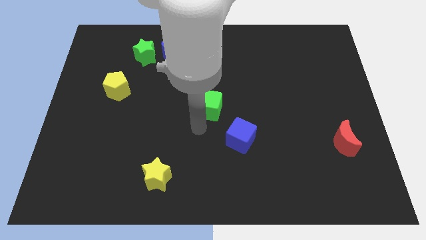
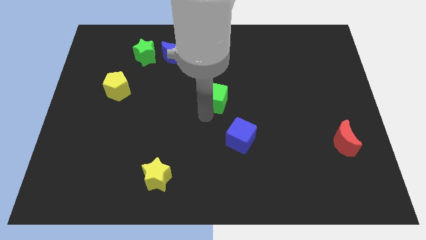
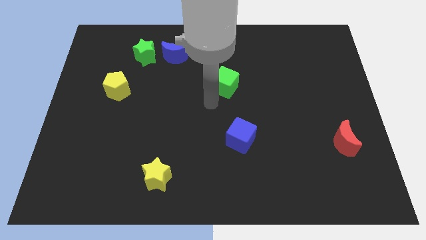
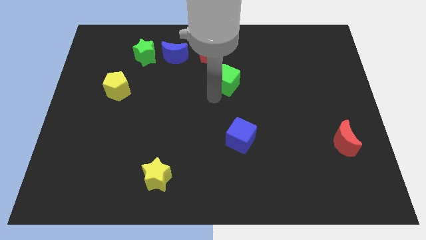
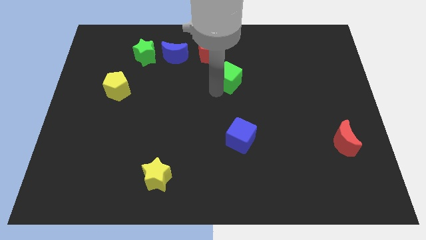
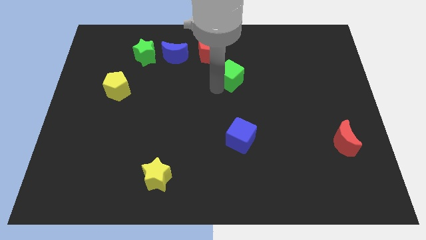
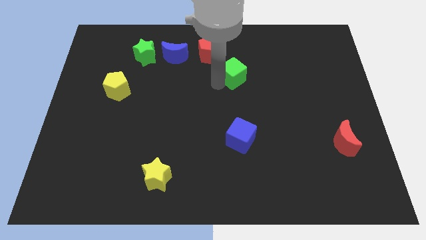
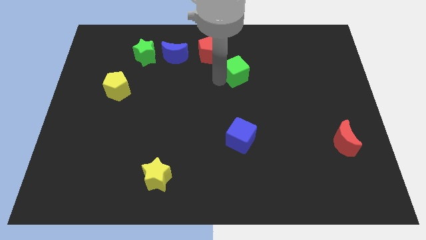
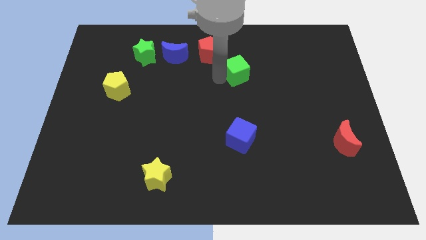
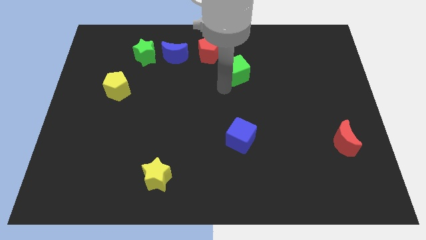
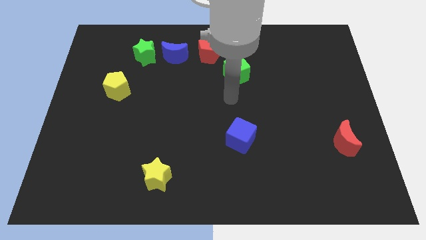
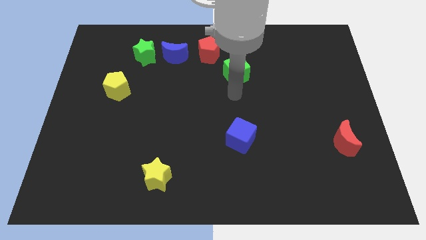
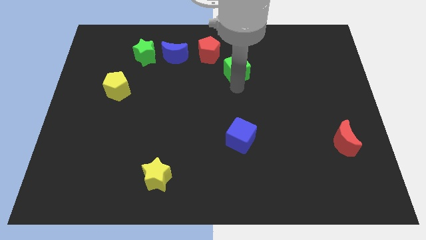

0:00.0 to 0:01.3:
place the green cube vertically above the blue cube

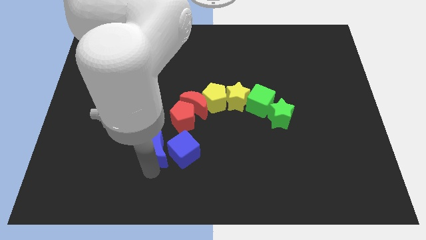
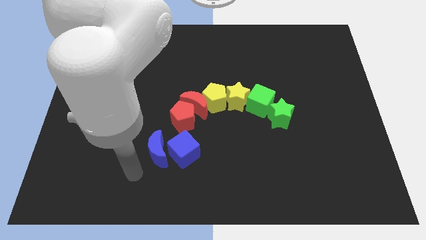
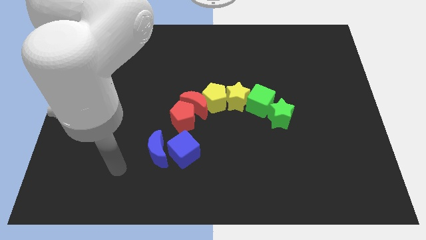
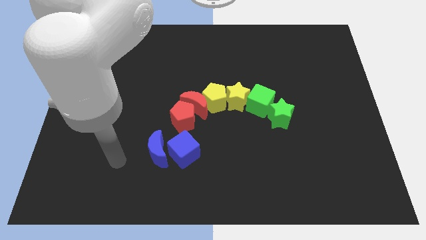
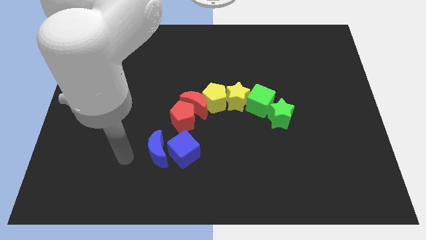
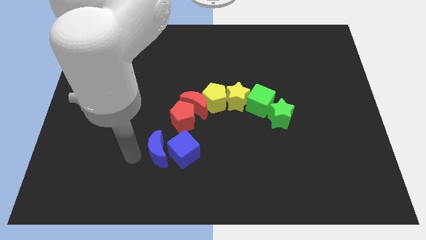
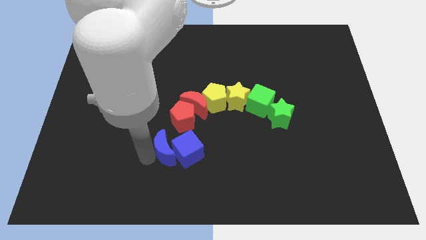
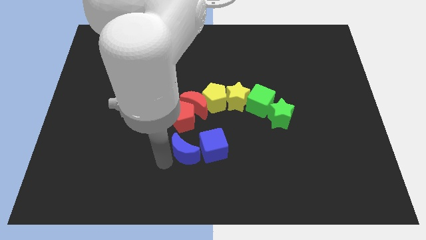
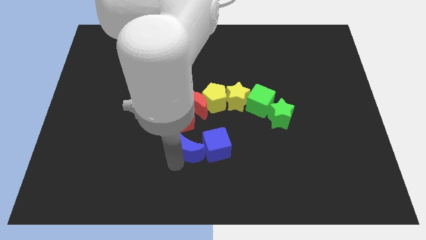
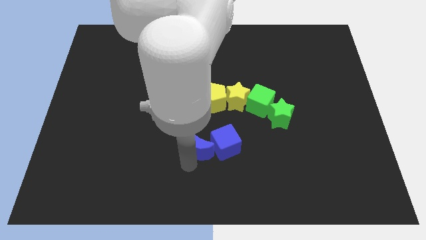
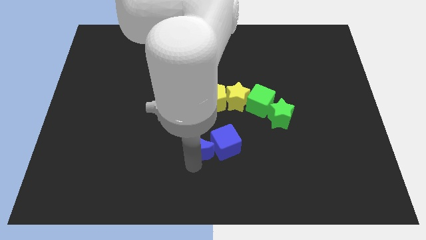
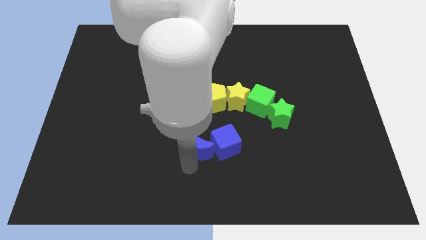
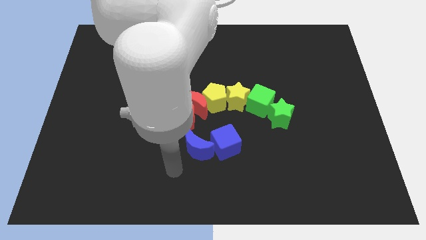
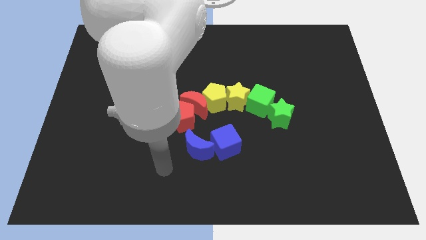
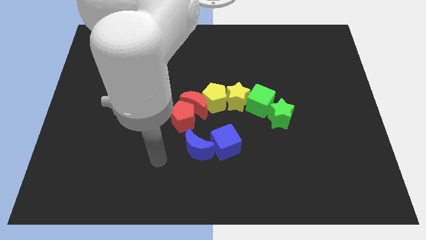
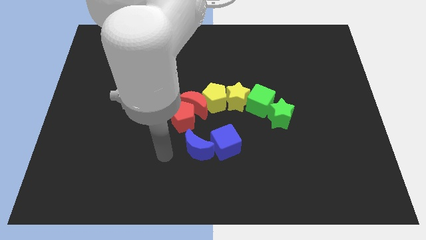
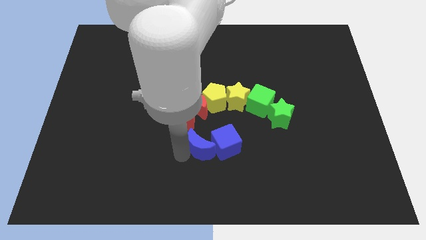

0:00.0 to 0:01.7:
push the blue crescent into the blue cube

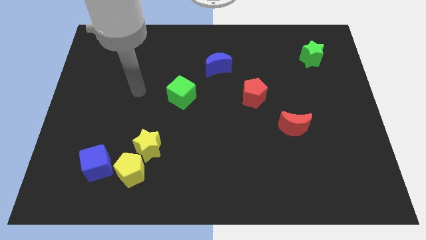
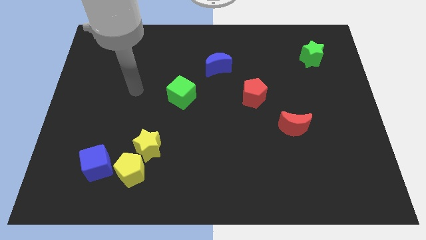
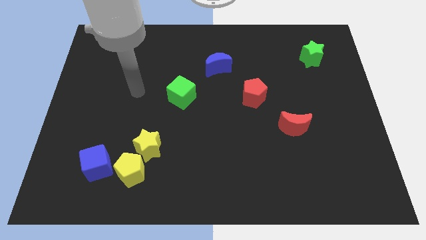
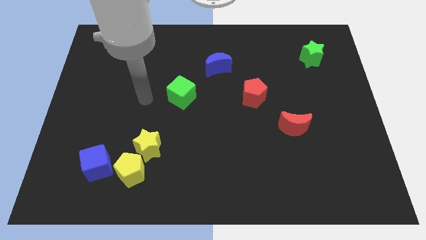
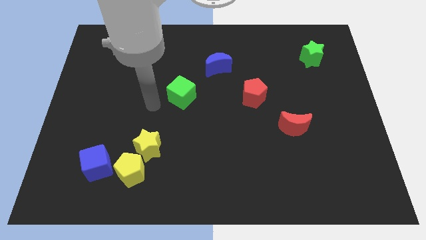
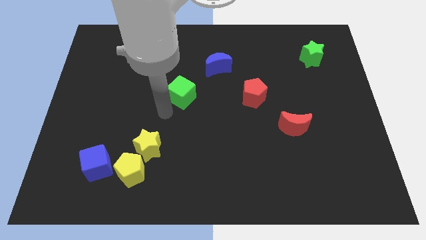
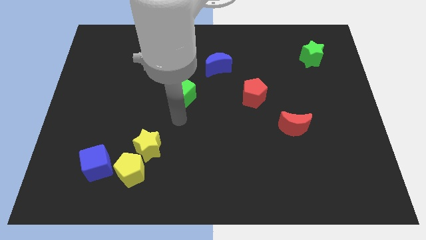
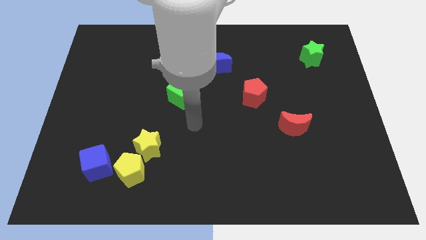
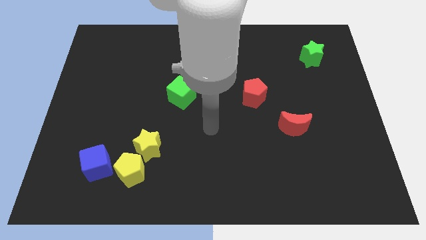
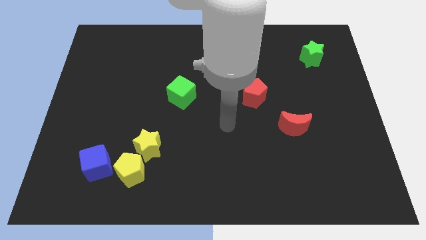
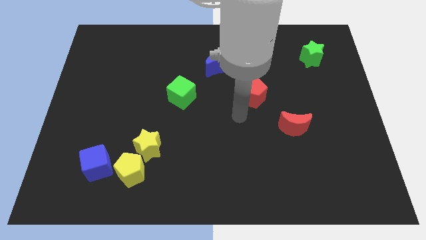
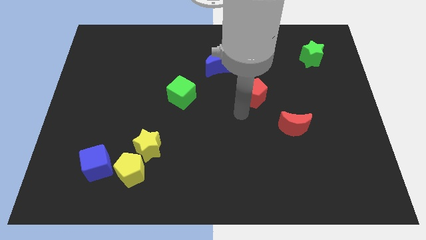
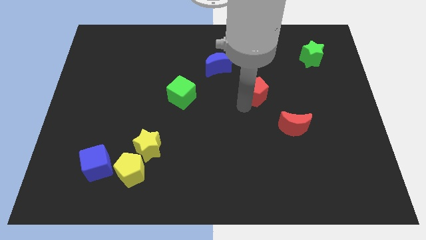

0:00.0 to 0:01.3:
place the arm diagonally to the red pentagon

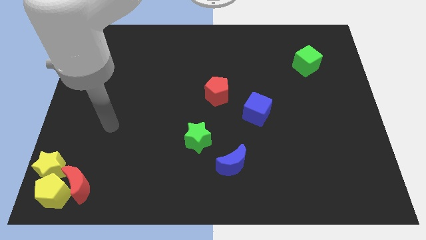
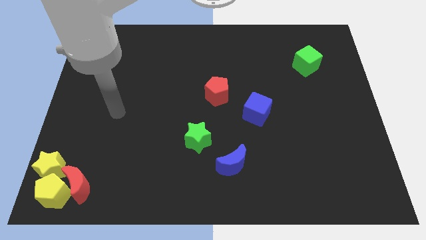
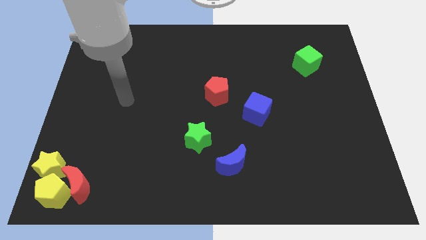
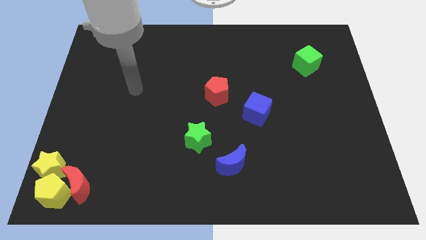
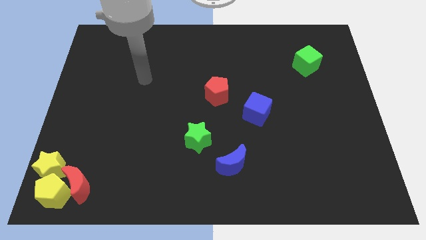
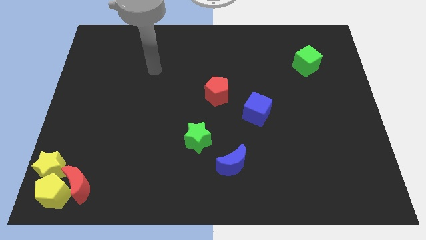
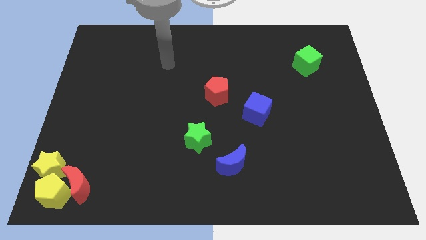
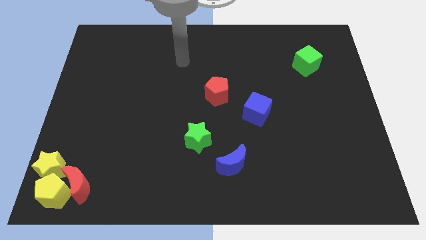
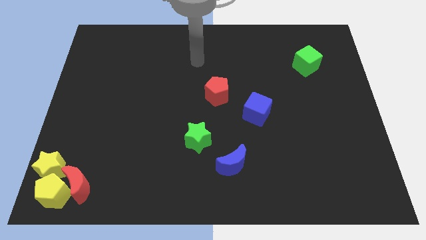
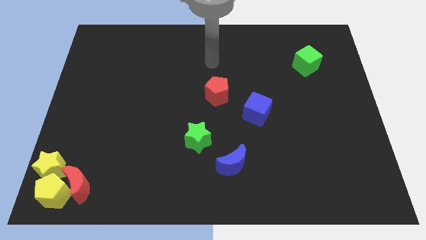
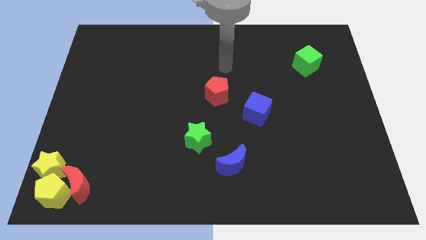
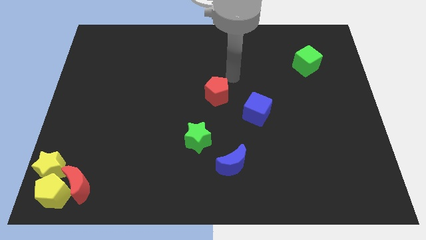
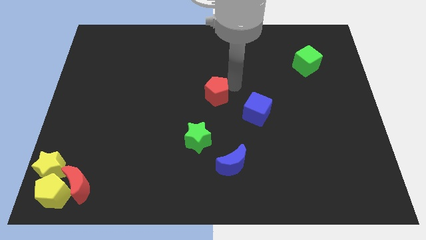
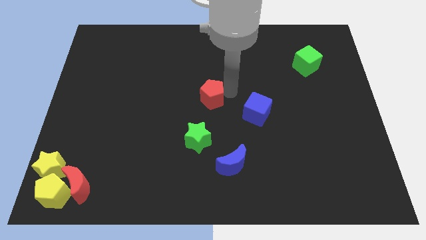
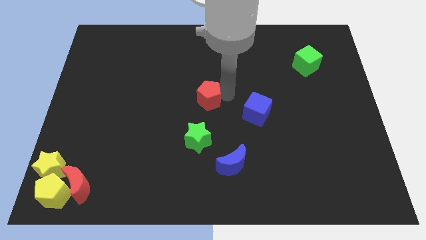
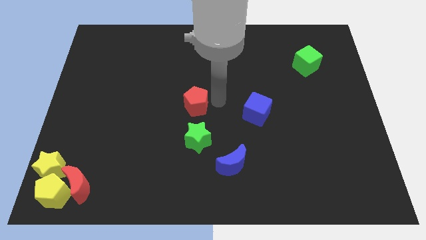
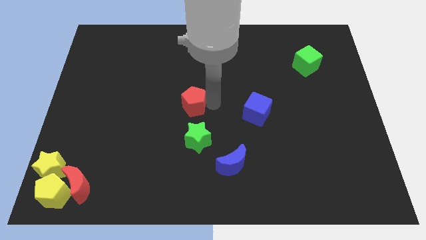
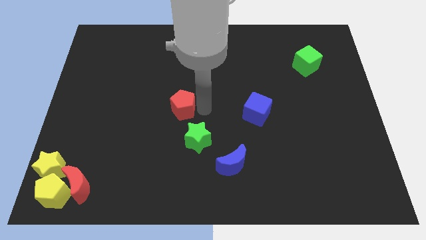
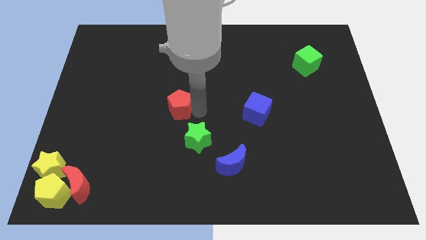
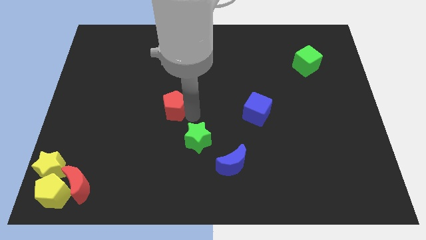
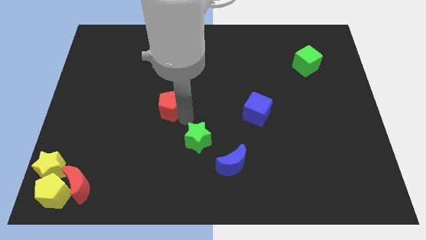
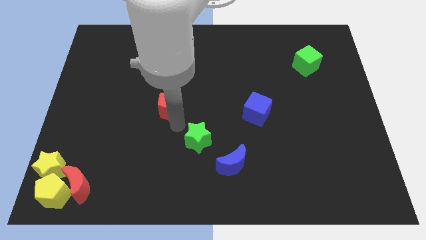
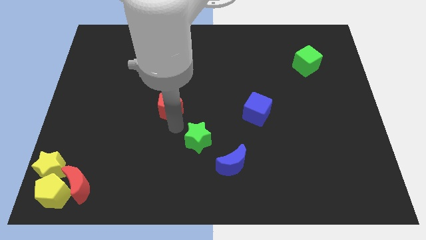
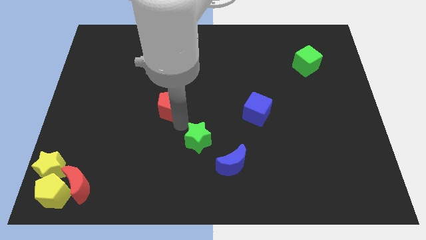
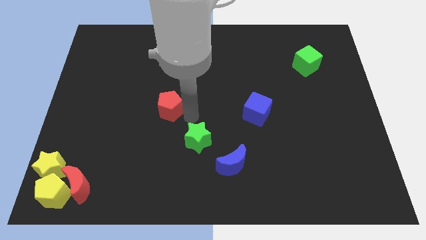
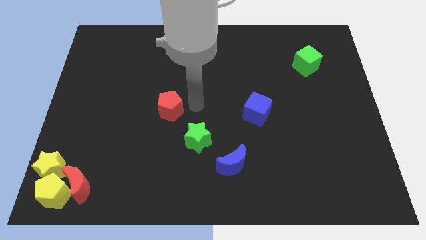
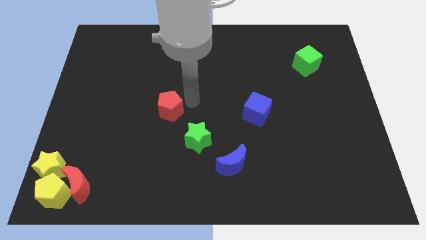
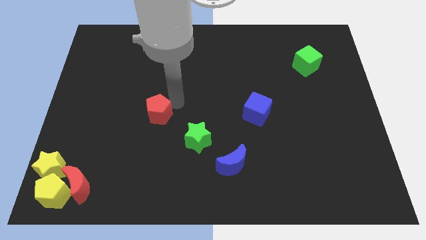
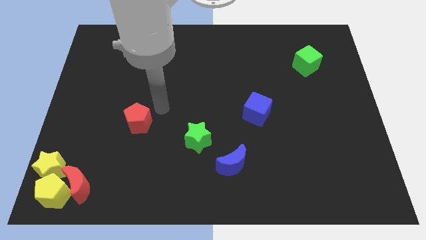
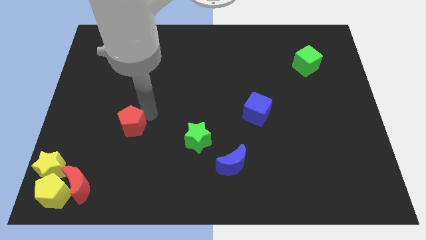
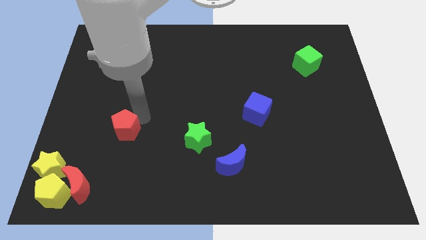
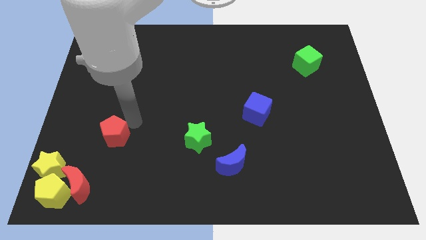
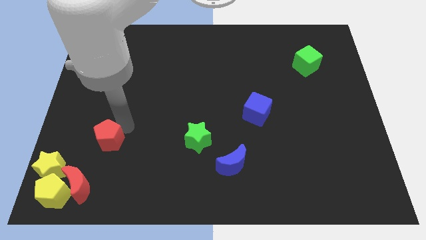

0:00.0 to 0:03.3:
slide the red pentagon towards the bottom left

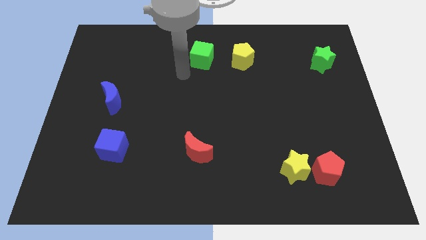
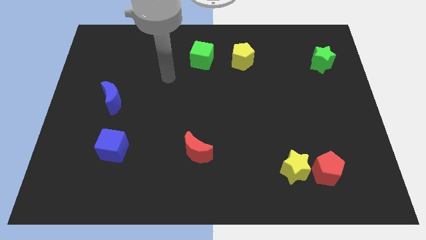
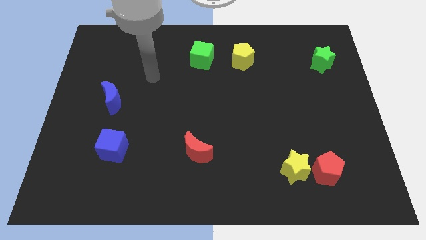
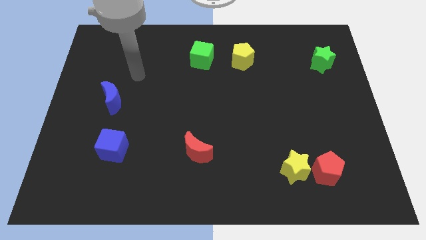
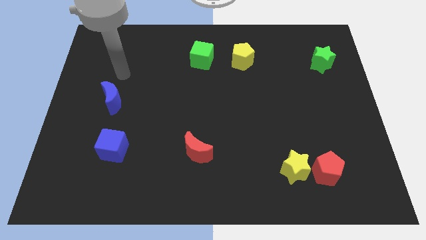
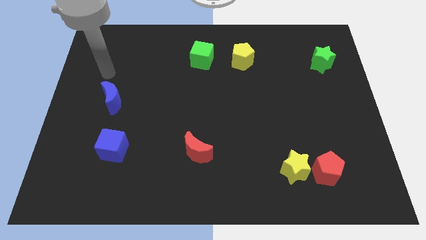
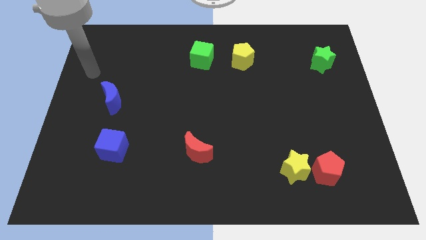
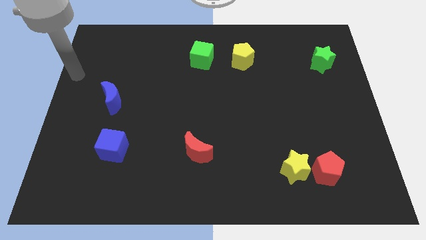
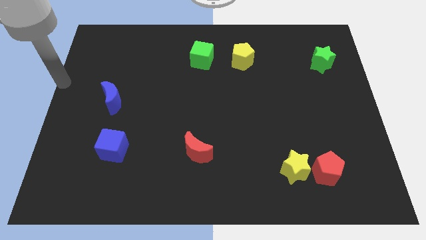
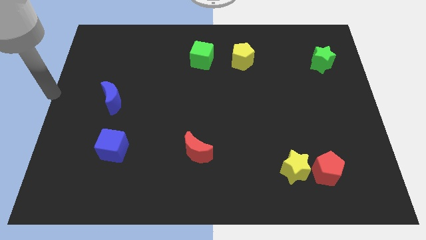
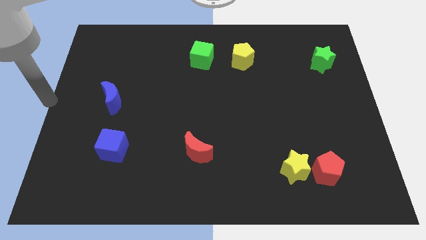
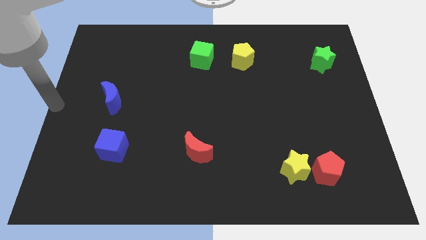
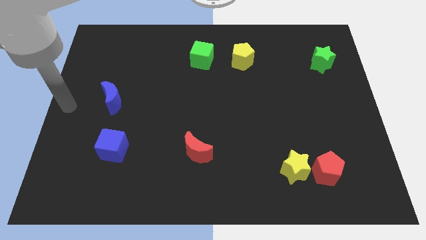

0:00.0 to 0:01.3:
place your hand at left center of the board
